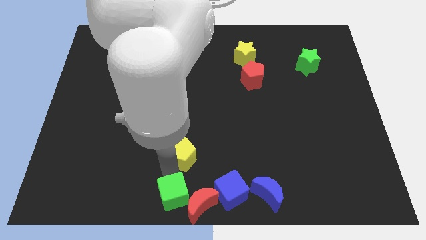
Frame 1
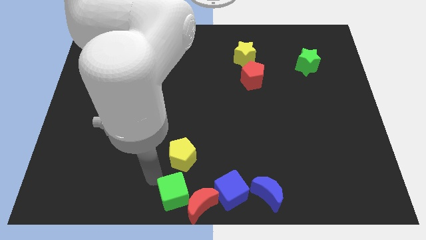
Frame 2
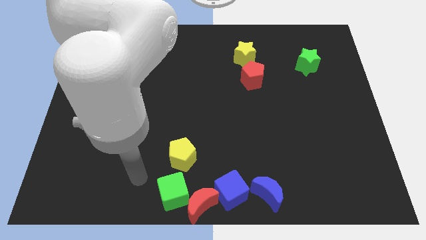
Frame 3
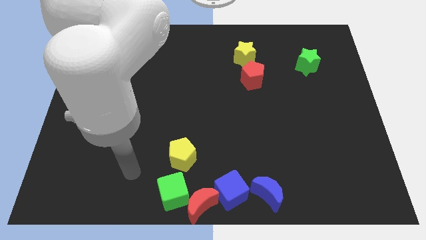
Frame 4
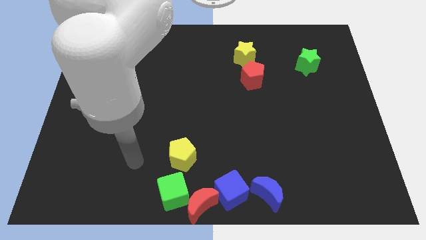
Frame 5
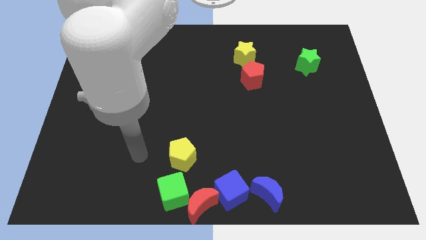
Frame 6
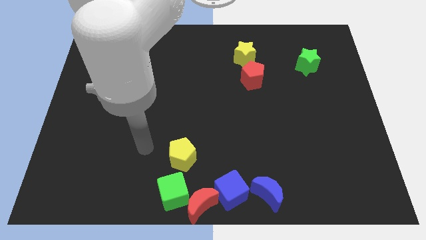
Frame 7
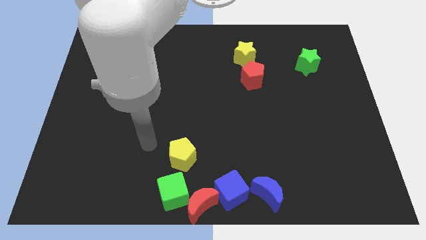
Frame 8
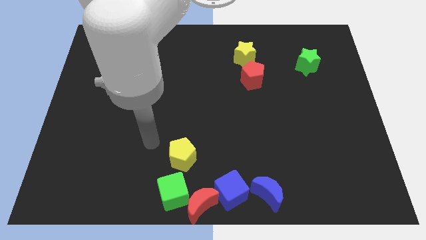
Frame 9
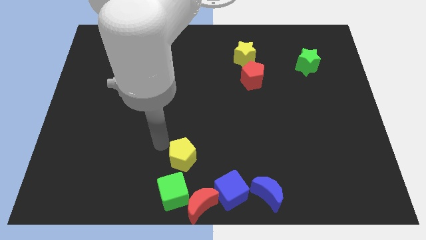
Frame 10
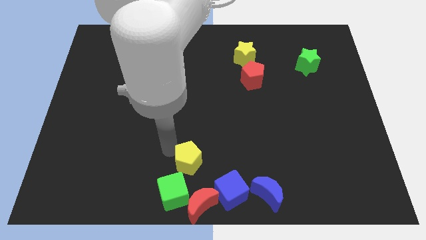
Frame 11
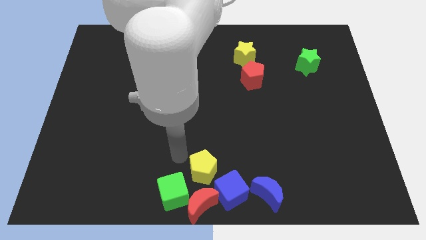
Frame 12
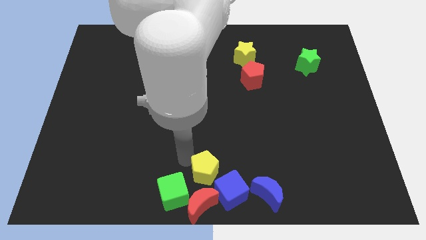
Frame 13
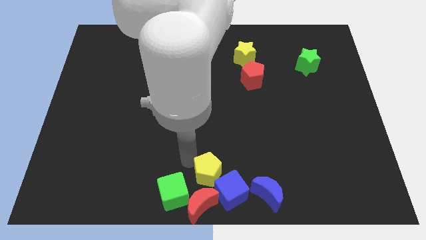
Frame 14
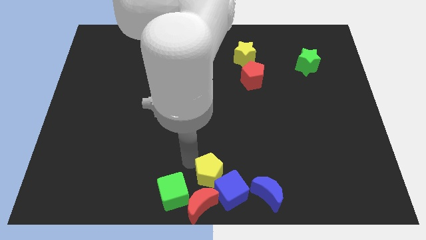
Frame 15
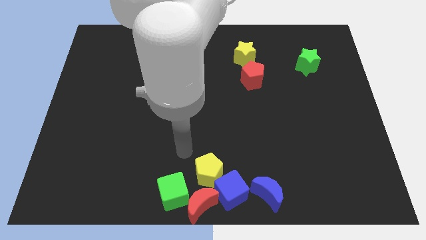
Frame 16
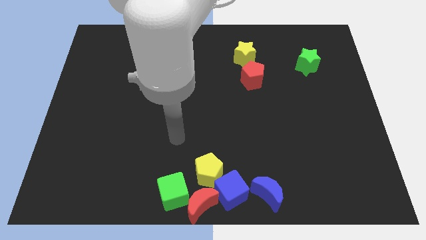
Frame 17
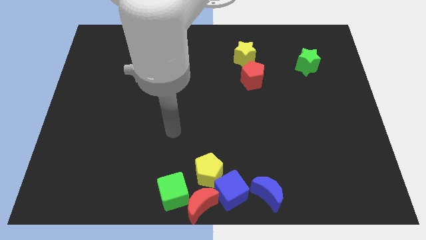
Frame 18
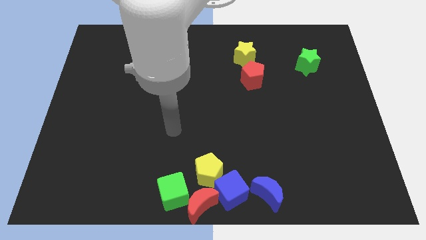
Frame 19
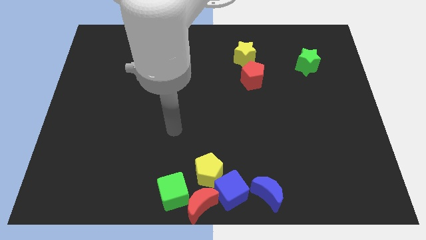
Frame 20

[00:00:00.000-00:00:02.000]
push the yellow pentagon into the blue cube

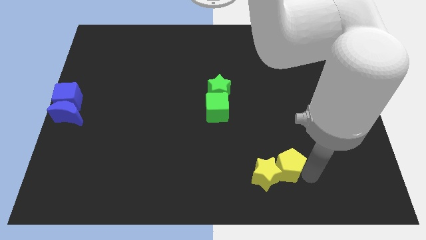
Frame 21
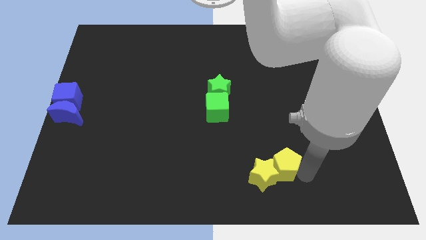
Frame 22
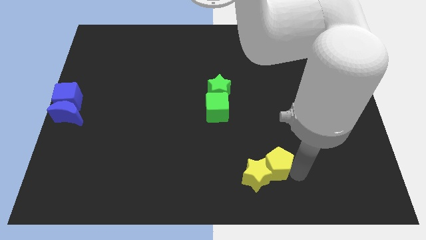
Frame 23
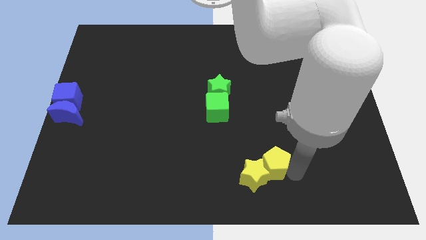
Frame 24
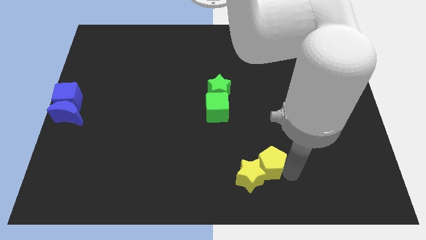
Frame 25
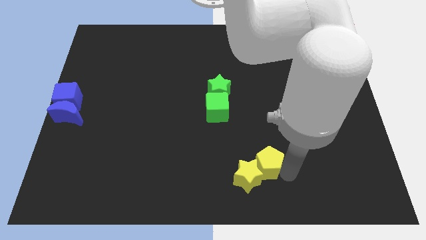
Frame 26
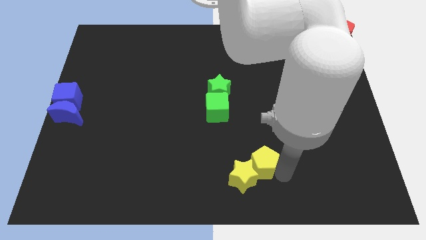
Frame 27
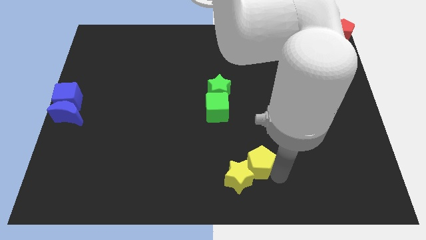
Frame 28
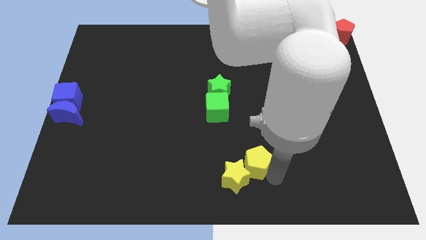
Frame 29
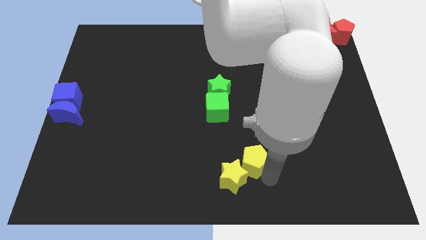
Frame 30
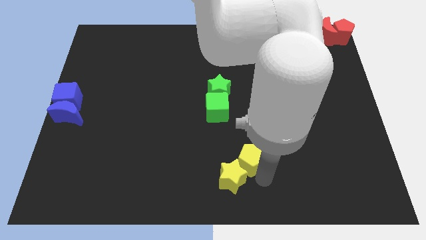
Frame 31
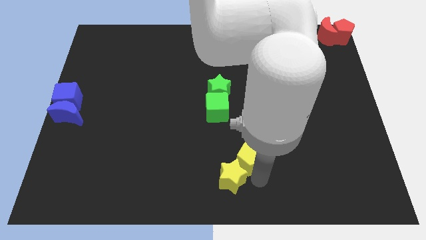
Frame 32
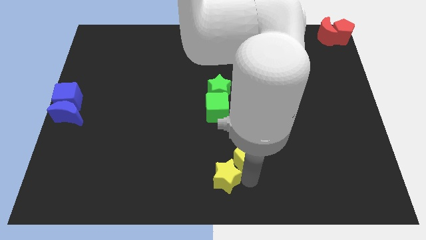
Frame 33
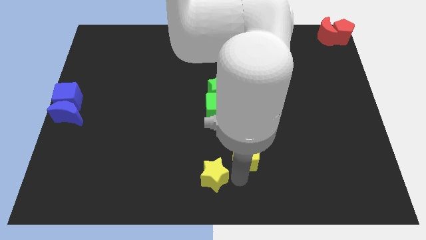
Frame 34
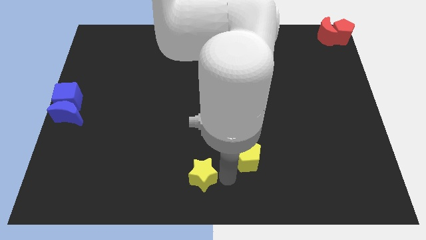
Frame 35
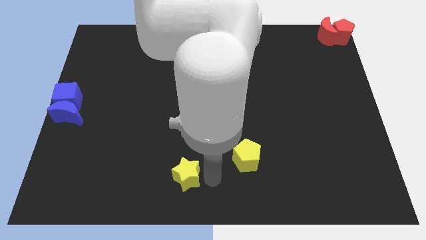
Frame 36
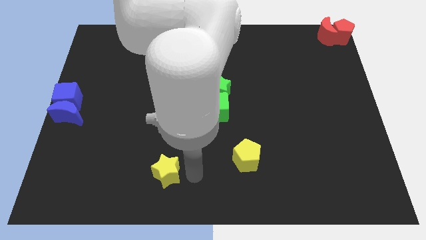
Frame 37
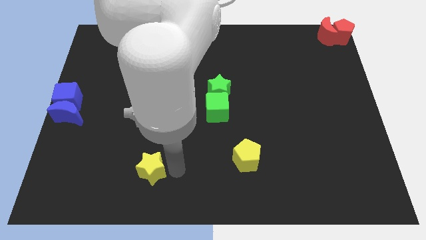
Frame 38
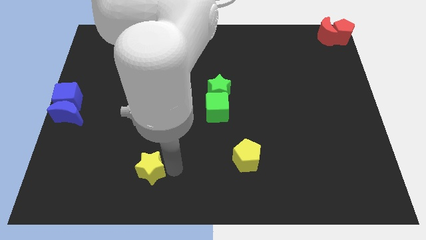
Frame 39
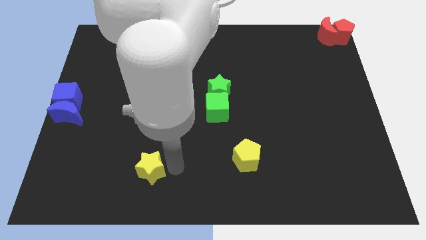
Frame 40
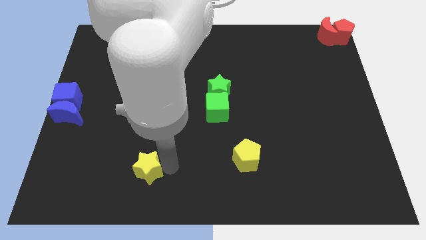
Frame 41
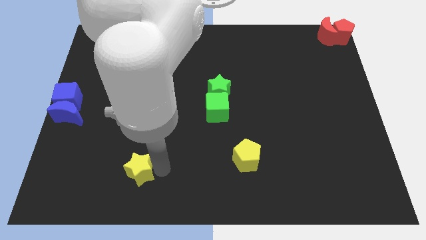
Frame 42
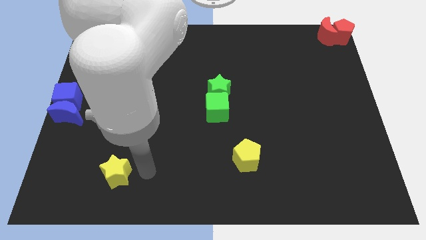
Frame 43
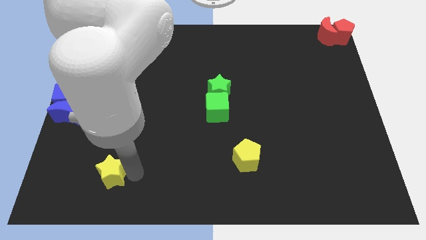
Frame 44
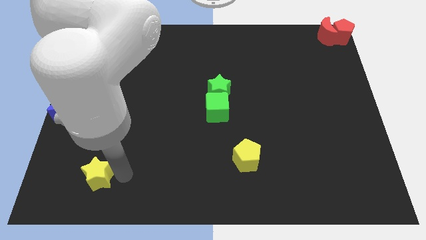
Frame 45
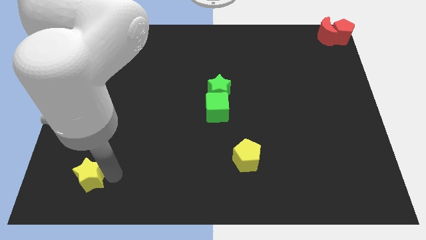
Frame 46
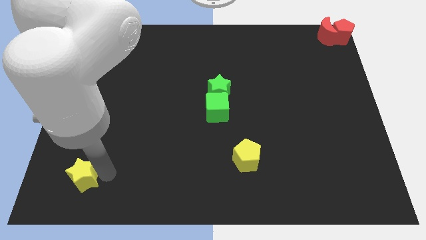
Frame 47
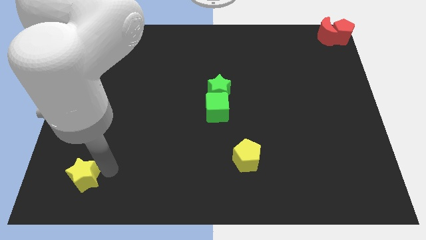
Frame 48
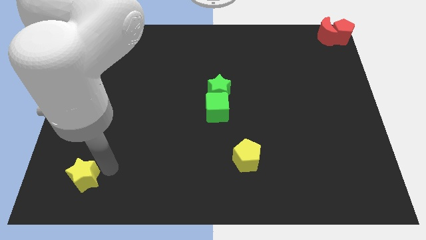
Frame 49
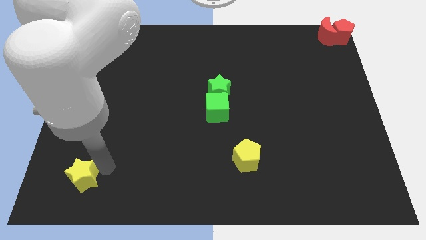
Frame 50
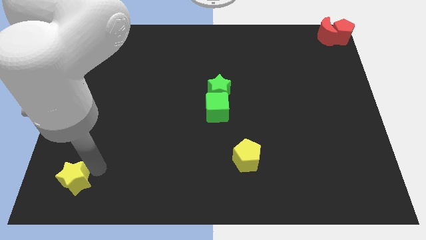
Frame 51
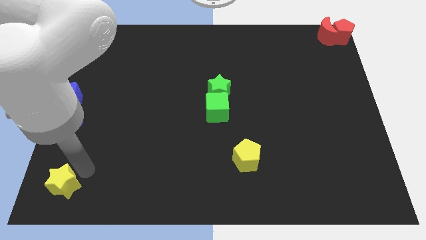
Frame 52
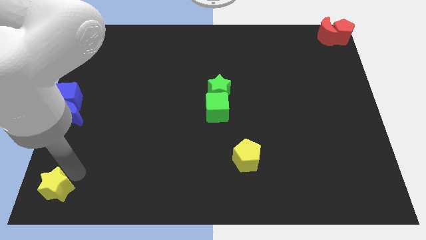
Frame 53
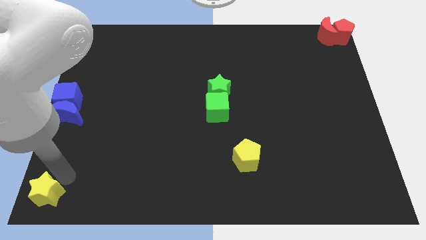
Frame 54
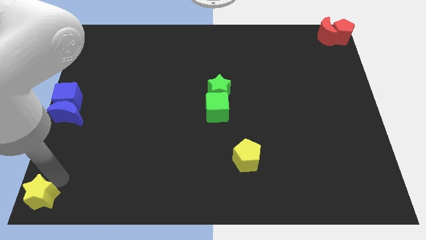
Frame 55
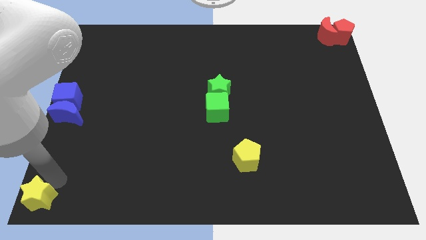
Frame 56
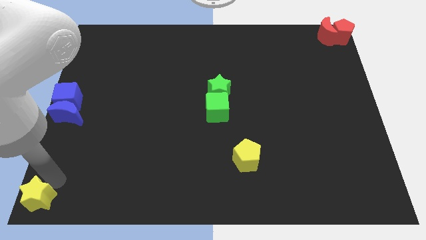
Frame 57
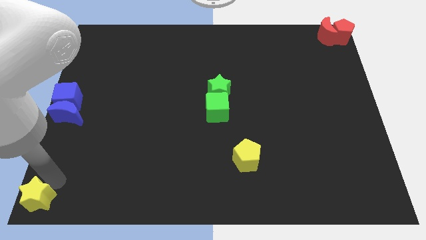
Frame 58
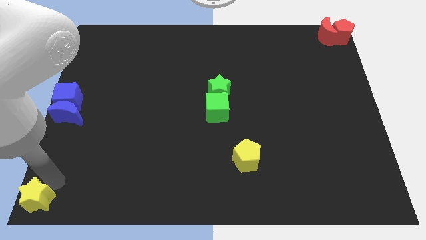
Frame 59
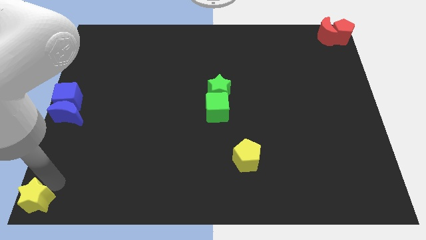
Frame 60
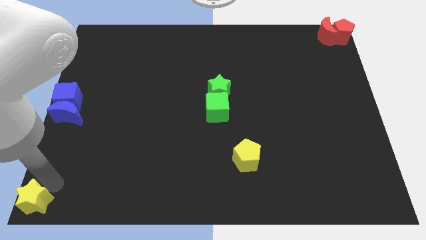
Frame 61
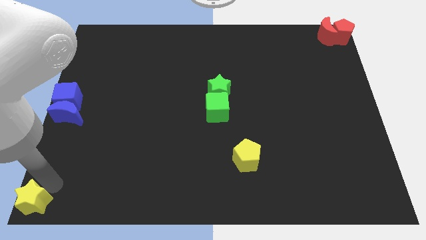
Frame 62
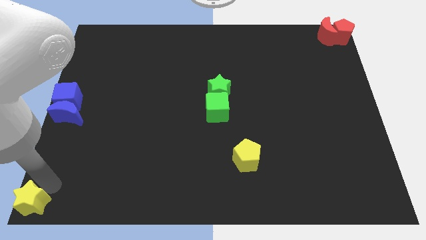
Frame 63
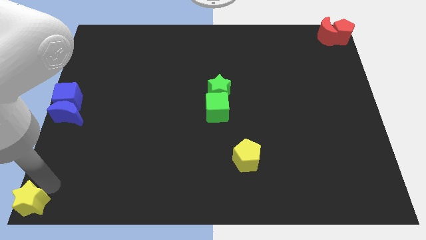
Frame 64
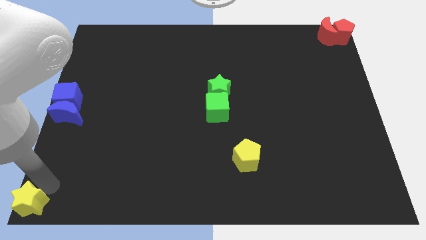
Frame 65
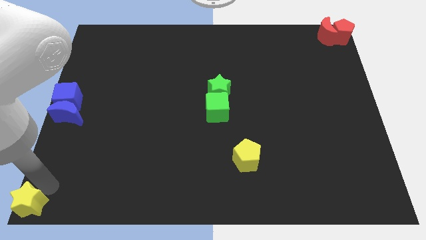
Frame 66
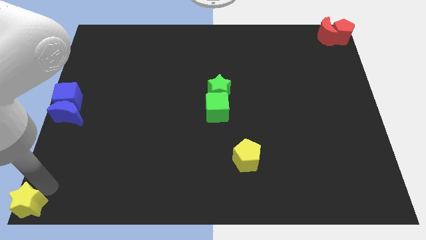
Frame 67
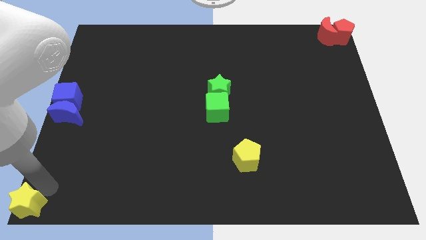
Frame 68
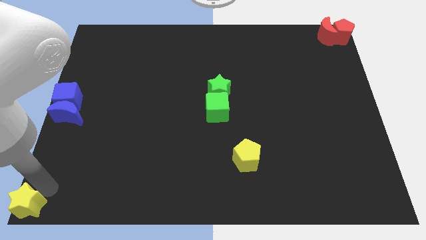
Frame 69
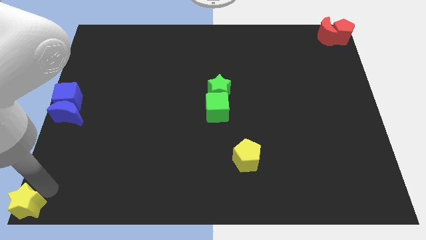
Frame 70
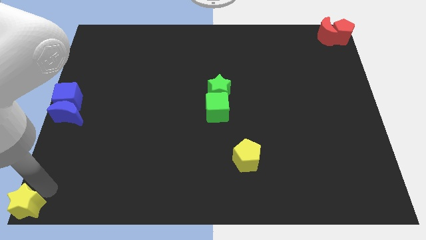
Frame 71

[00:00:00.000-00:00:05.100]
move the yellow star into the bottom left corner

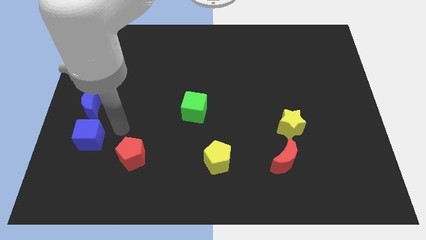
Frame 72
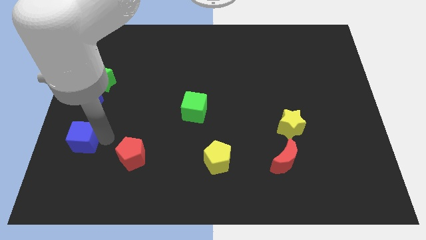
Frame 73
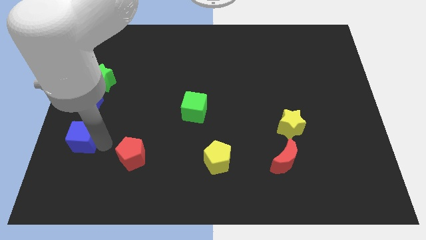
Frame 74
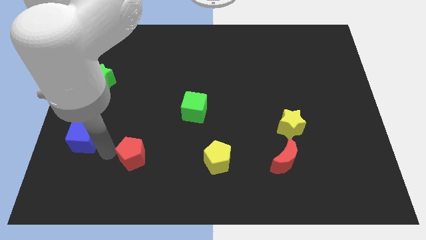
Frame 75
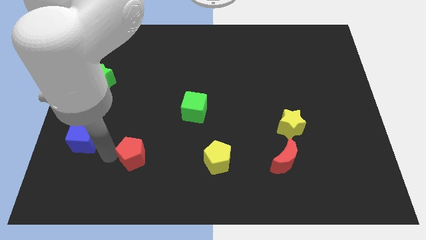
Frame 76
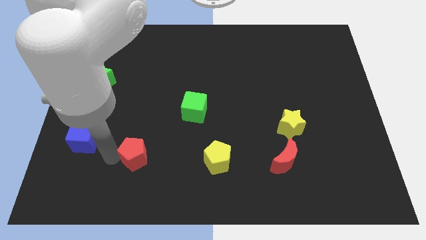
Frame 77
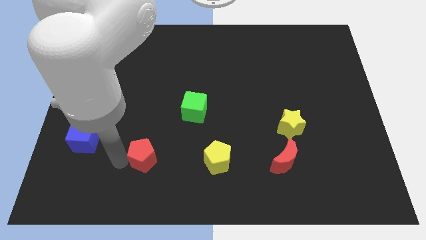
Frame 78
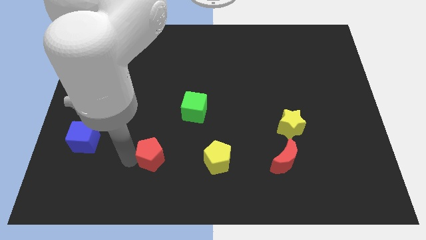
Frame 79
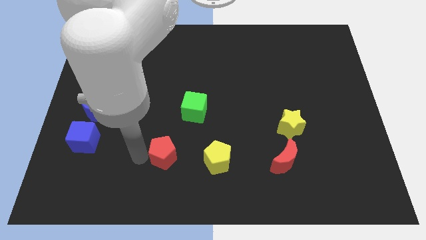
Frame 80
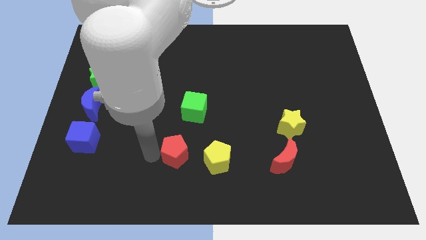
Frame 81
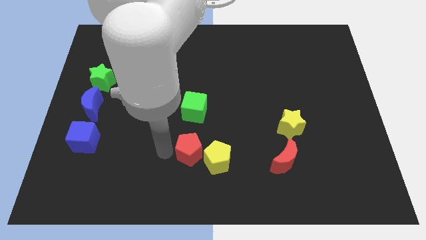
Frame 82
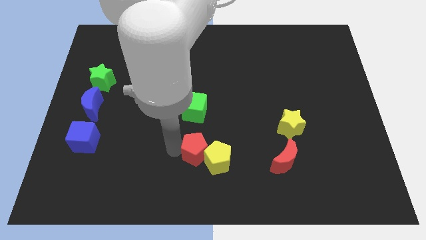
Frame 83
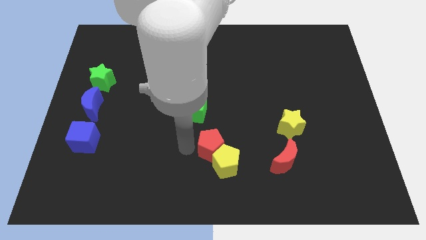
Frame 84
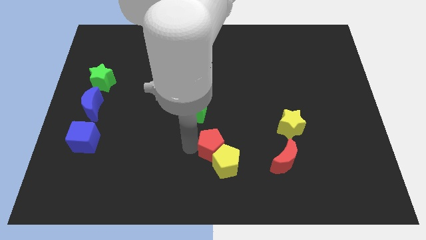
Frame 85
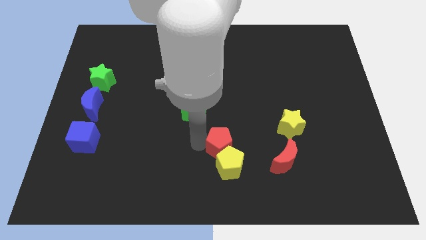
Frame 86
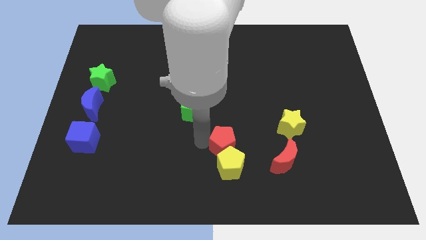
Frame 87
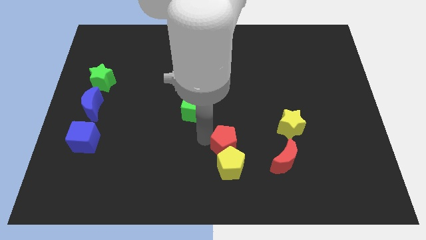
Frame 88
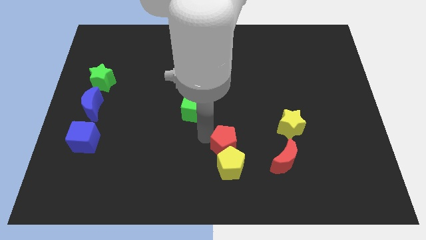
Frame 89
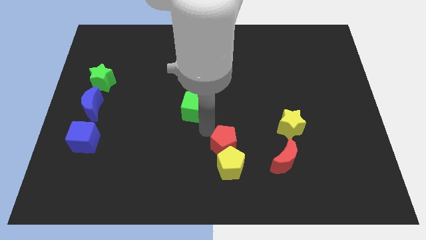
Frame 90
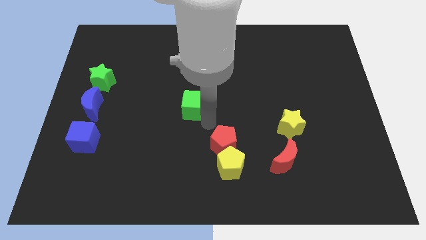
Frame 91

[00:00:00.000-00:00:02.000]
push the red pentagon to the top side of the yellow pentagon

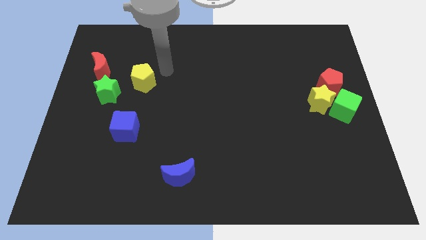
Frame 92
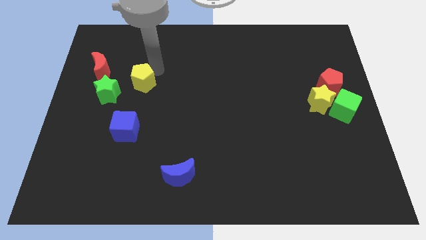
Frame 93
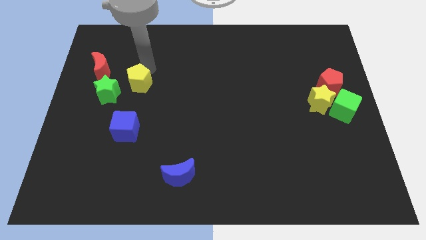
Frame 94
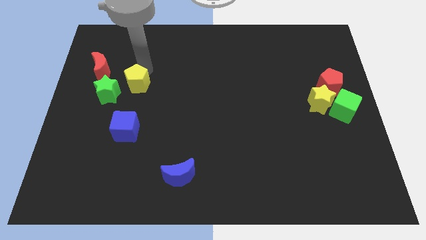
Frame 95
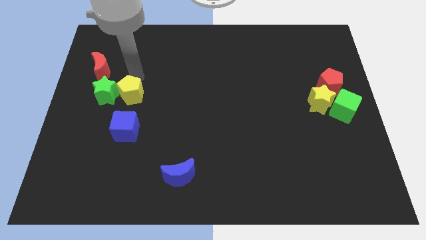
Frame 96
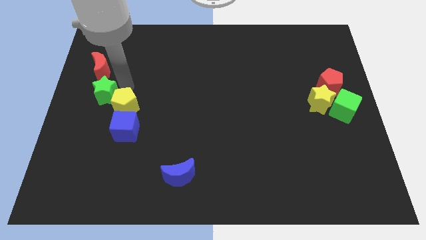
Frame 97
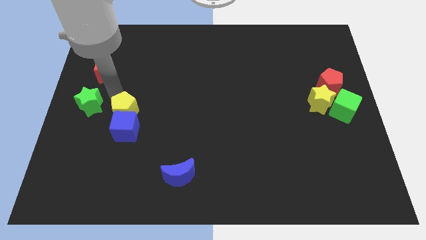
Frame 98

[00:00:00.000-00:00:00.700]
place yellow pentagon above blue cube
